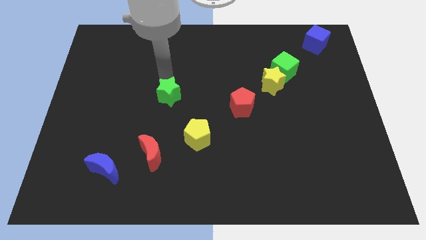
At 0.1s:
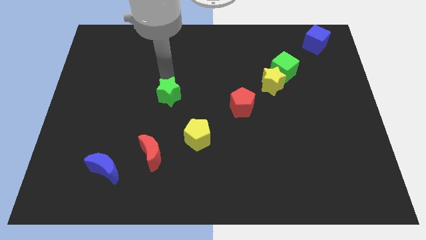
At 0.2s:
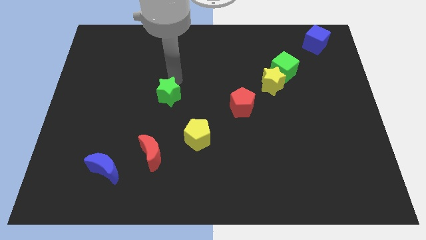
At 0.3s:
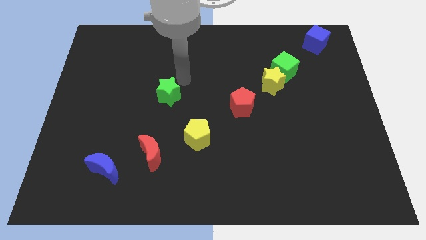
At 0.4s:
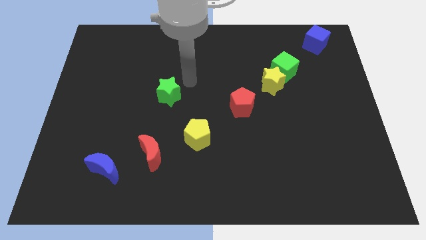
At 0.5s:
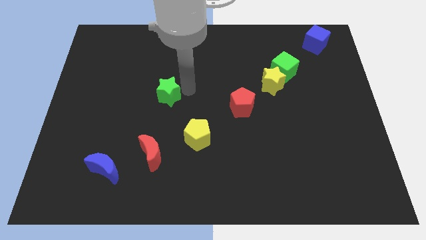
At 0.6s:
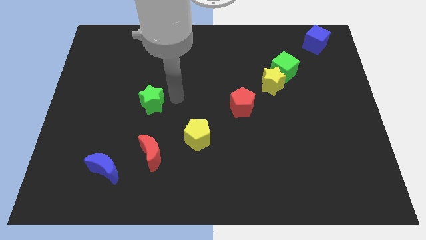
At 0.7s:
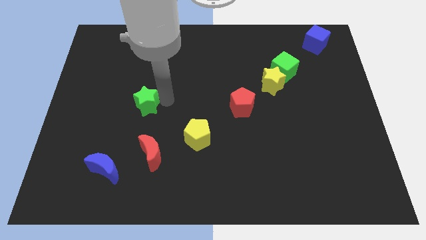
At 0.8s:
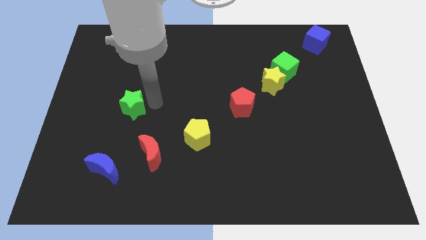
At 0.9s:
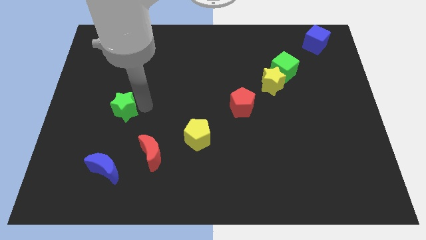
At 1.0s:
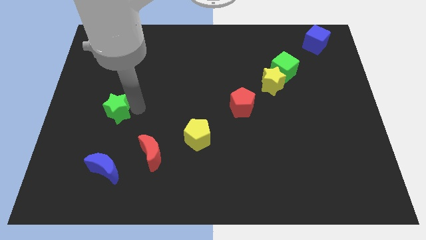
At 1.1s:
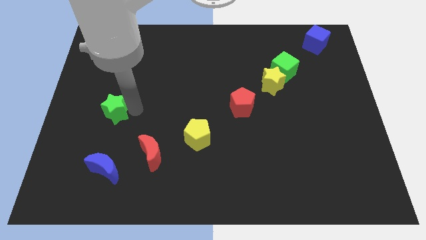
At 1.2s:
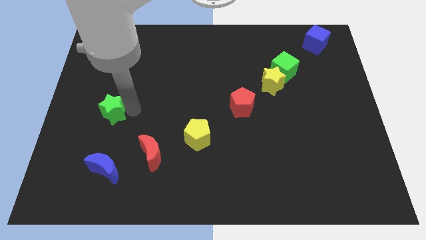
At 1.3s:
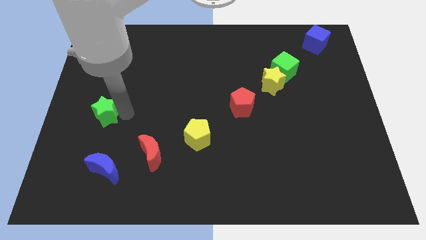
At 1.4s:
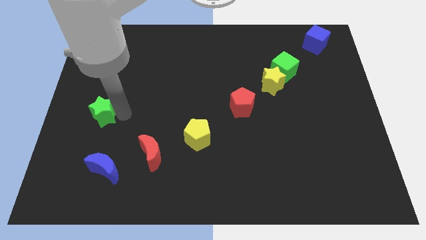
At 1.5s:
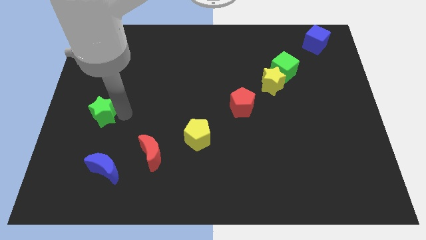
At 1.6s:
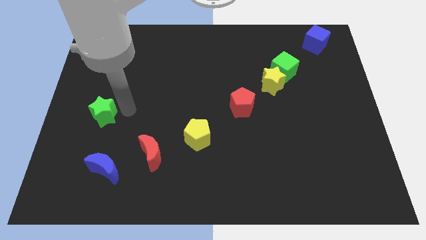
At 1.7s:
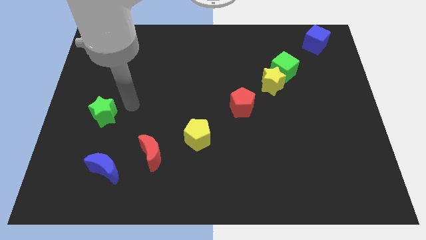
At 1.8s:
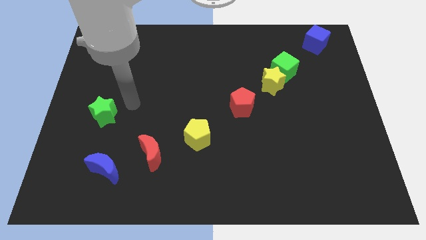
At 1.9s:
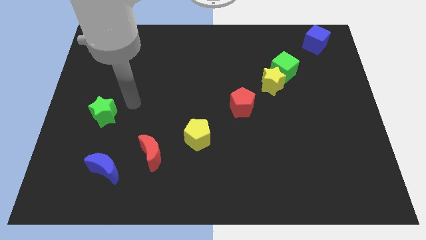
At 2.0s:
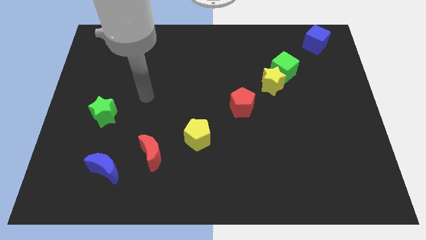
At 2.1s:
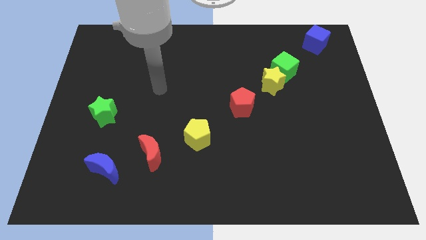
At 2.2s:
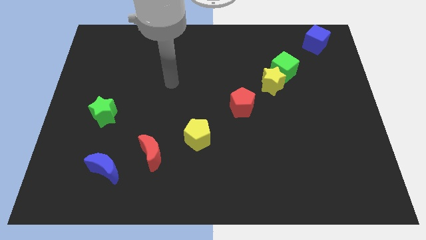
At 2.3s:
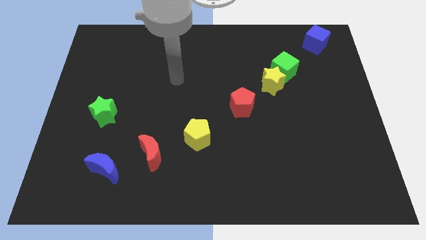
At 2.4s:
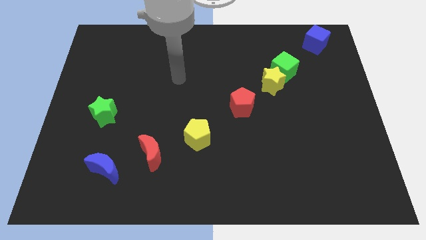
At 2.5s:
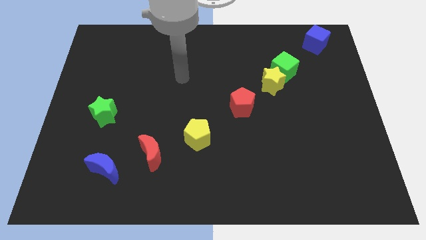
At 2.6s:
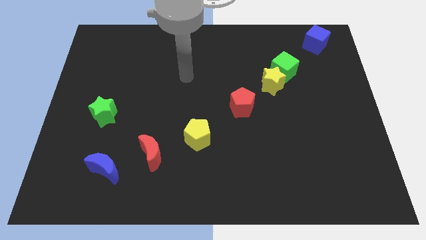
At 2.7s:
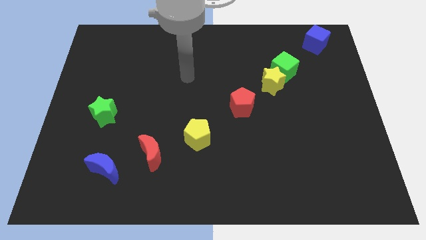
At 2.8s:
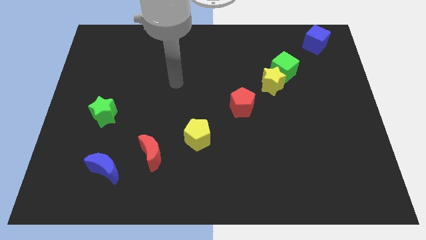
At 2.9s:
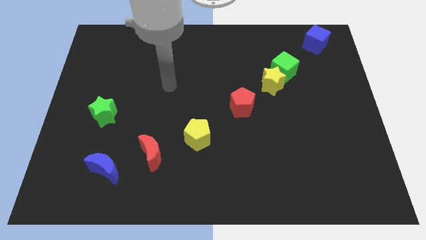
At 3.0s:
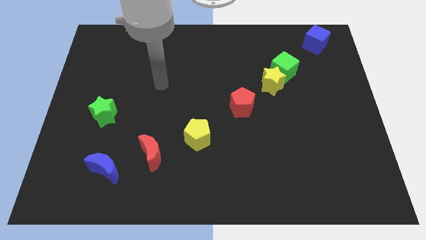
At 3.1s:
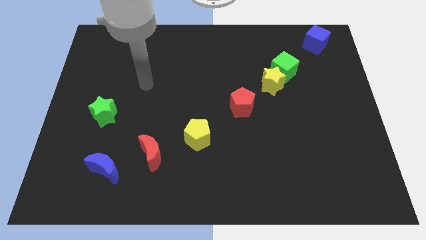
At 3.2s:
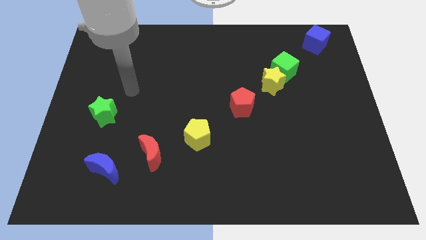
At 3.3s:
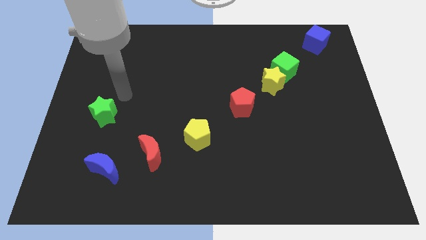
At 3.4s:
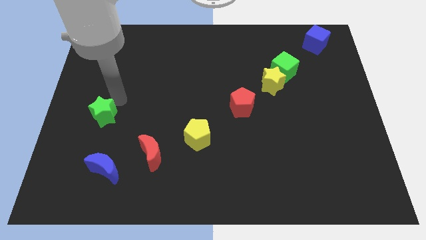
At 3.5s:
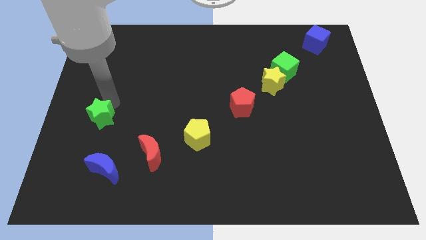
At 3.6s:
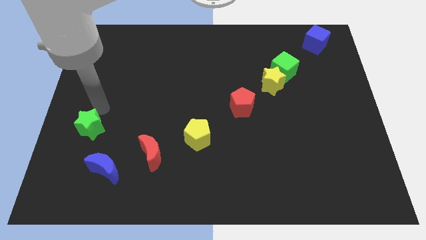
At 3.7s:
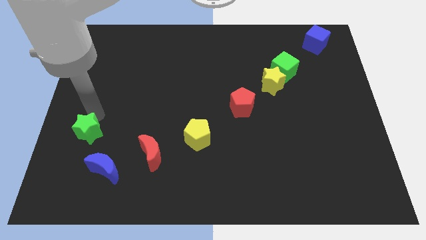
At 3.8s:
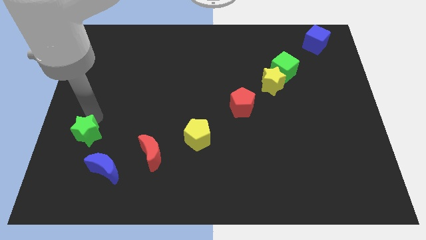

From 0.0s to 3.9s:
place green star above blue crescent

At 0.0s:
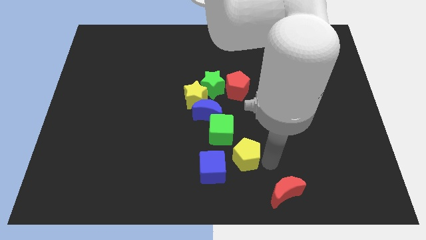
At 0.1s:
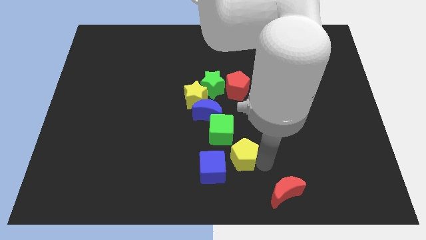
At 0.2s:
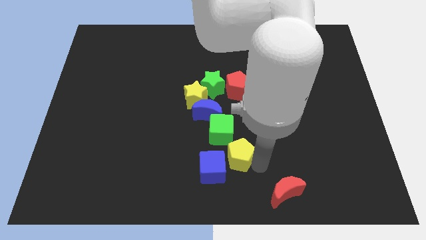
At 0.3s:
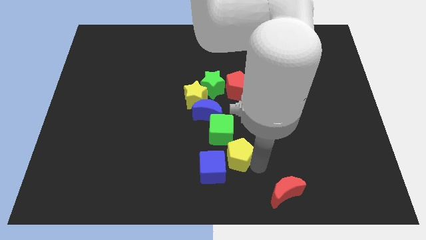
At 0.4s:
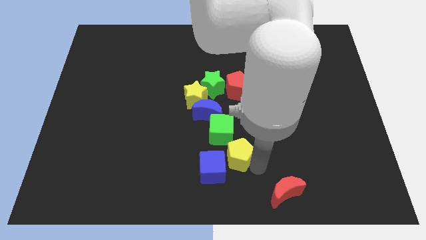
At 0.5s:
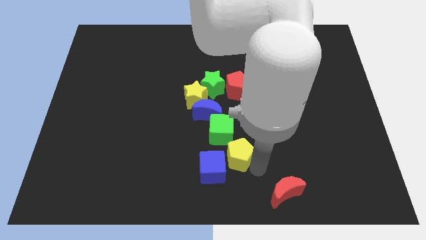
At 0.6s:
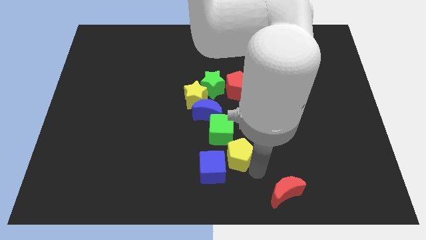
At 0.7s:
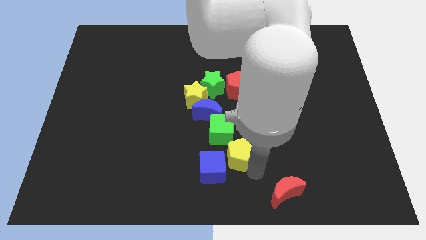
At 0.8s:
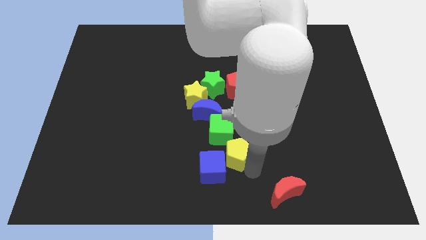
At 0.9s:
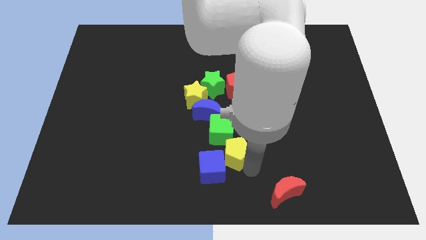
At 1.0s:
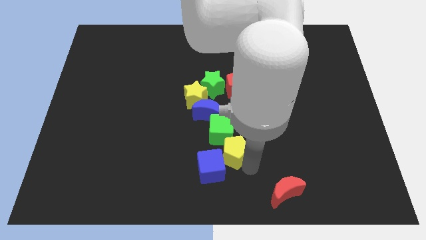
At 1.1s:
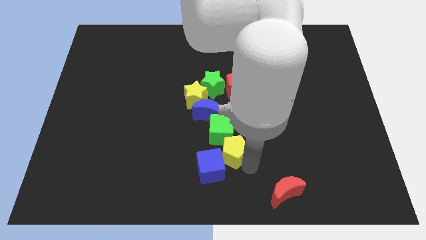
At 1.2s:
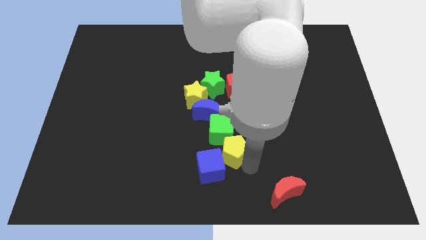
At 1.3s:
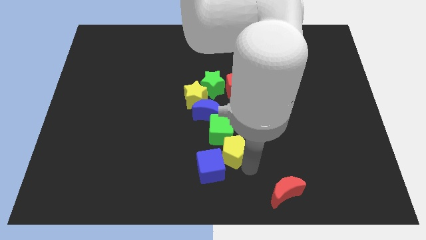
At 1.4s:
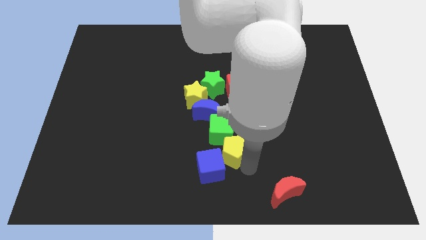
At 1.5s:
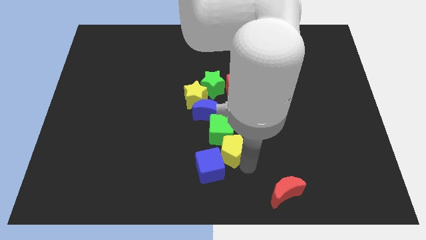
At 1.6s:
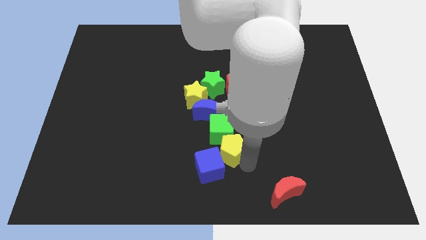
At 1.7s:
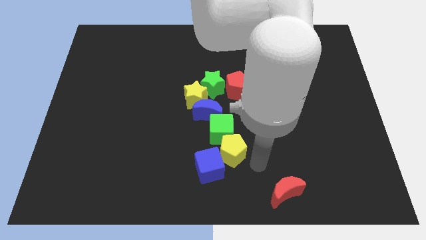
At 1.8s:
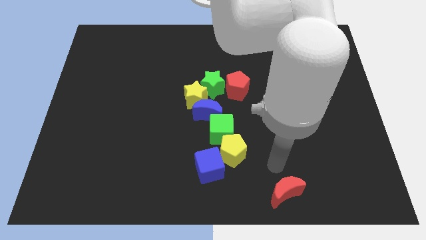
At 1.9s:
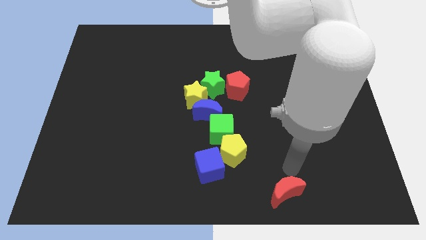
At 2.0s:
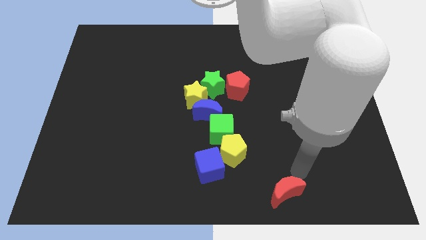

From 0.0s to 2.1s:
slide the yellow pentagon into the green cube

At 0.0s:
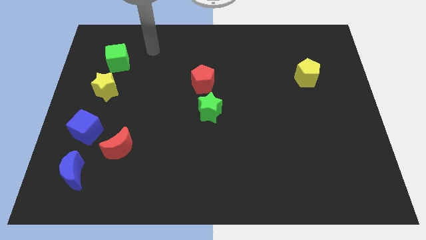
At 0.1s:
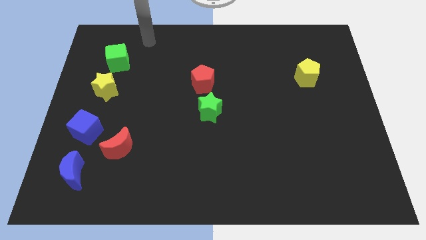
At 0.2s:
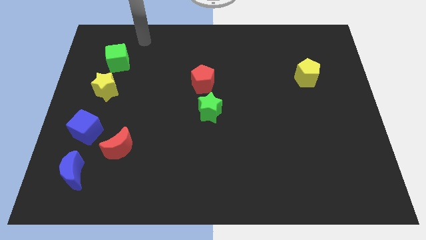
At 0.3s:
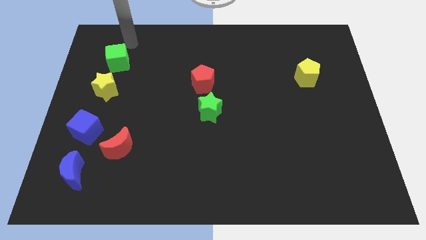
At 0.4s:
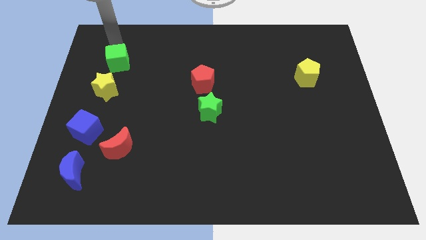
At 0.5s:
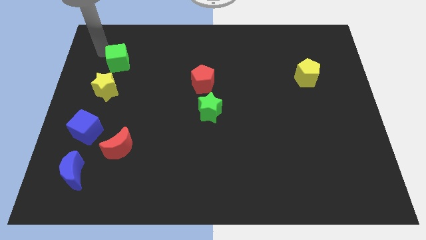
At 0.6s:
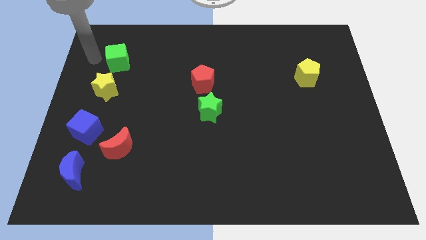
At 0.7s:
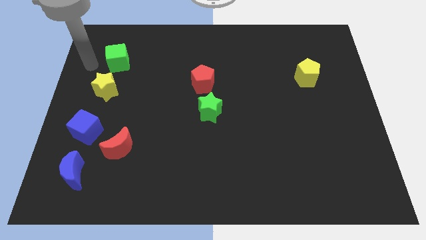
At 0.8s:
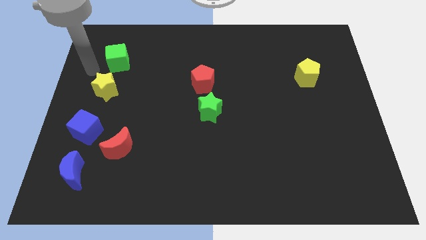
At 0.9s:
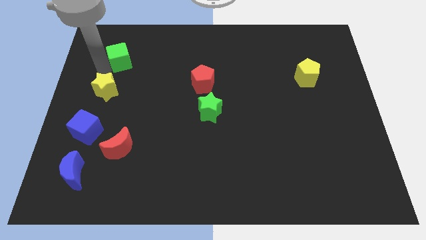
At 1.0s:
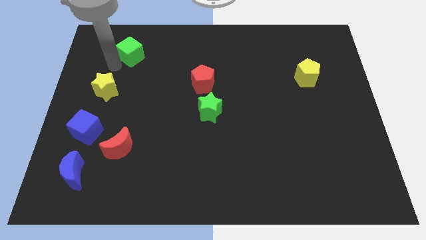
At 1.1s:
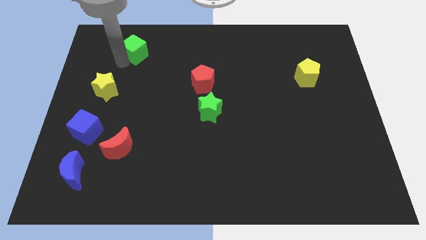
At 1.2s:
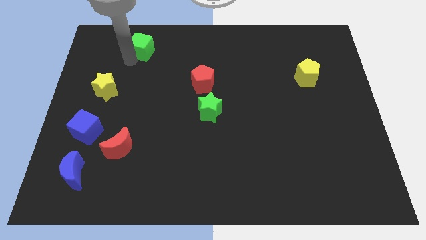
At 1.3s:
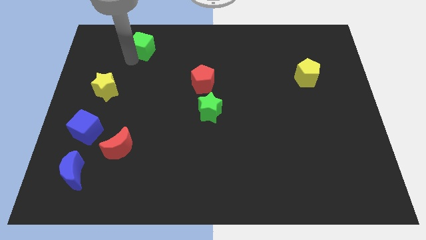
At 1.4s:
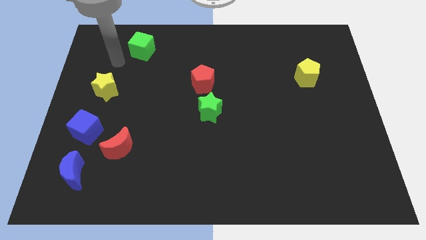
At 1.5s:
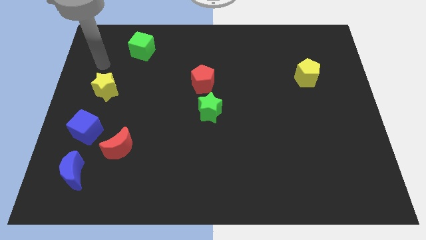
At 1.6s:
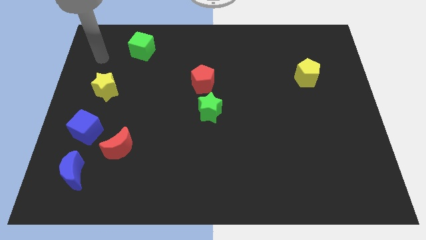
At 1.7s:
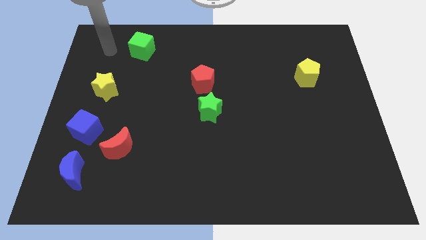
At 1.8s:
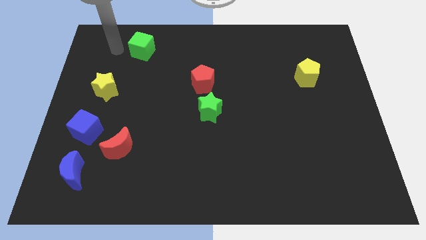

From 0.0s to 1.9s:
push the green cube slightly top center of the board

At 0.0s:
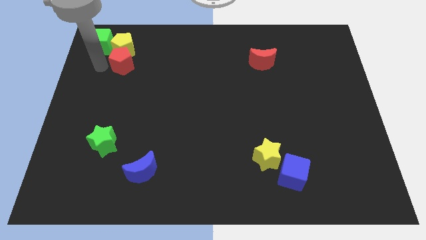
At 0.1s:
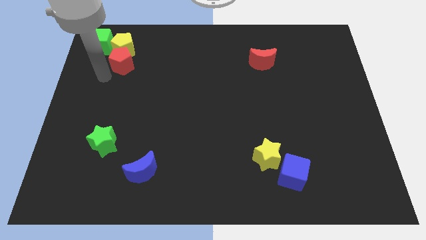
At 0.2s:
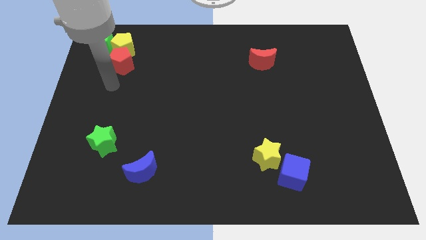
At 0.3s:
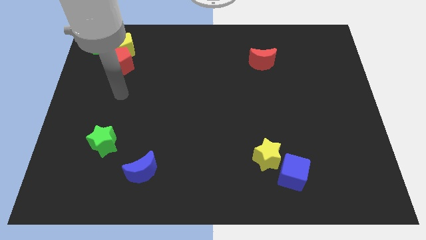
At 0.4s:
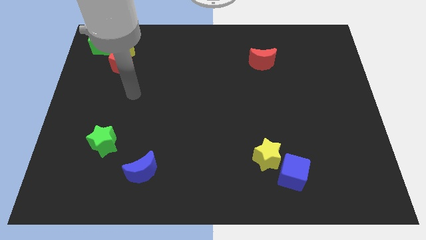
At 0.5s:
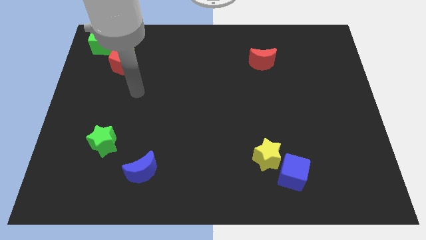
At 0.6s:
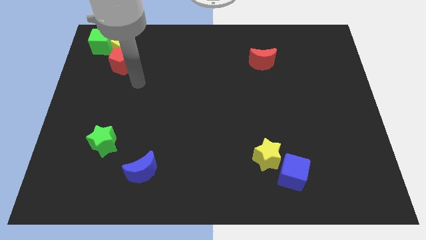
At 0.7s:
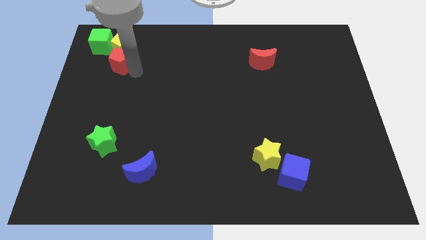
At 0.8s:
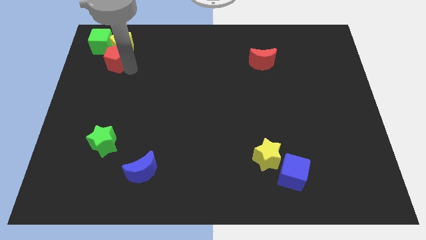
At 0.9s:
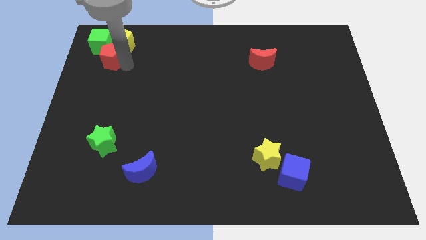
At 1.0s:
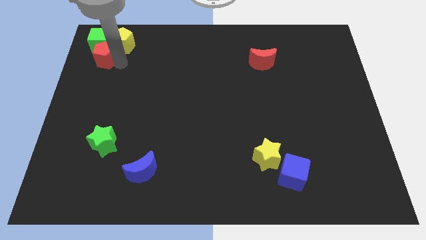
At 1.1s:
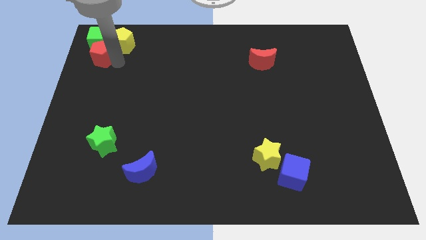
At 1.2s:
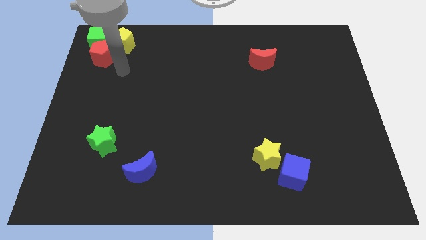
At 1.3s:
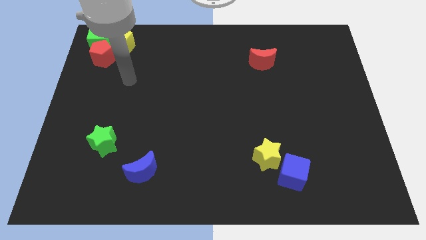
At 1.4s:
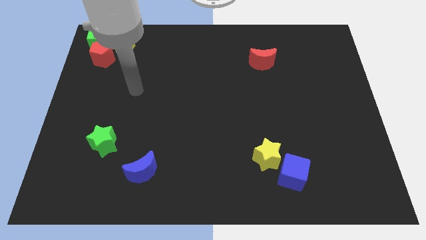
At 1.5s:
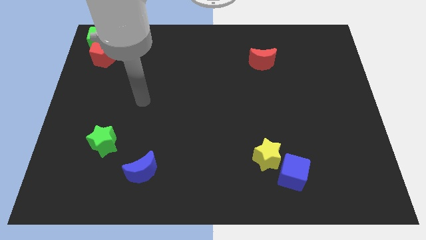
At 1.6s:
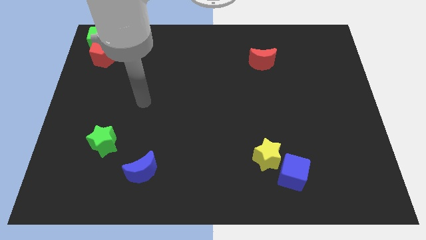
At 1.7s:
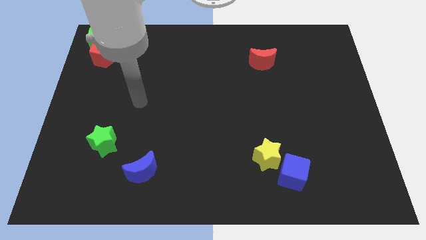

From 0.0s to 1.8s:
push the red pentagon into green cube
